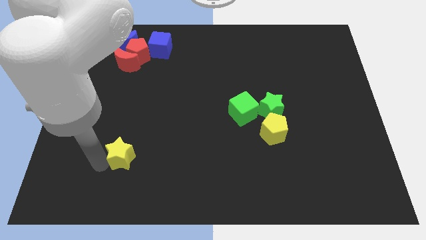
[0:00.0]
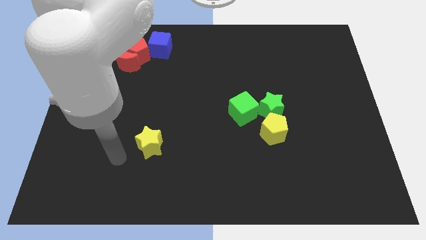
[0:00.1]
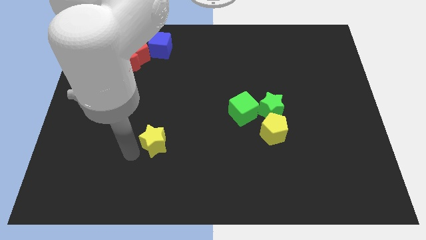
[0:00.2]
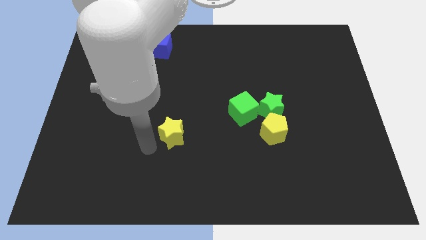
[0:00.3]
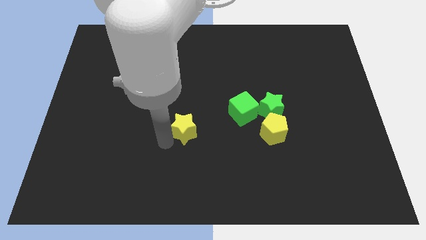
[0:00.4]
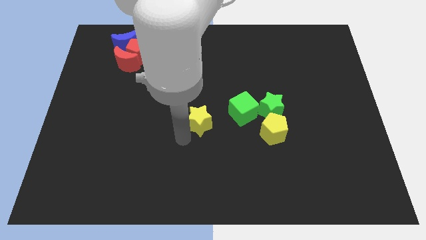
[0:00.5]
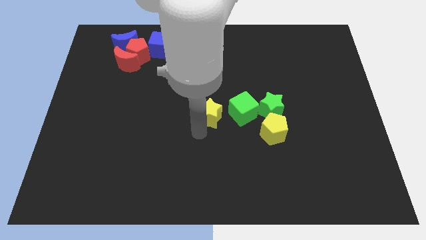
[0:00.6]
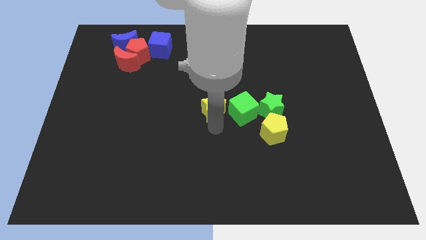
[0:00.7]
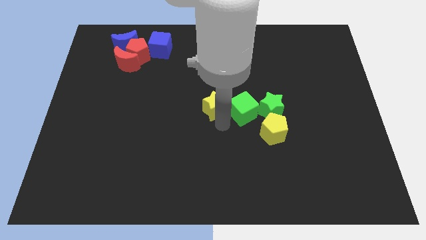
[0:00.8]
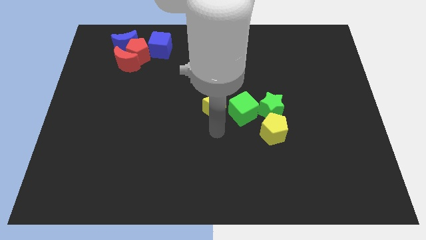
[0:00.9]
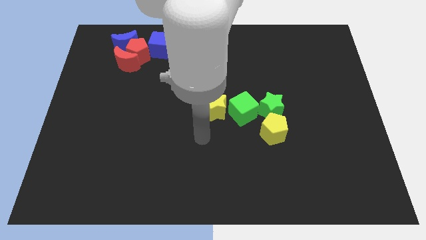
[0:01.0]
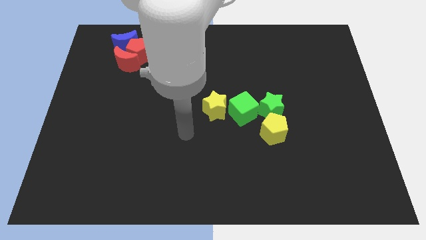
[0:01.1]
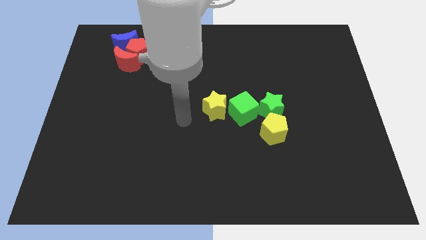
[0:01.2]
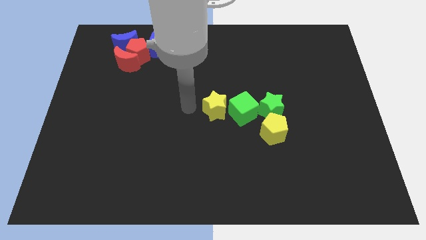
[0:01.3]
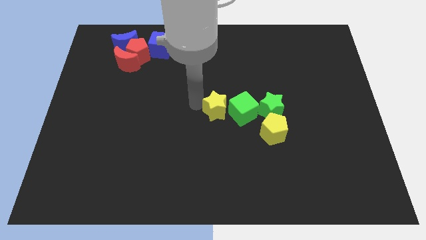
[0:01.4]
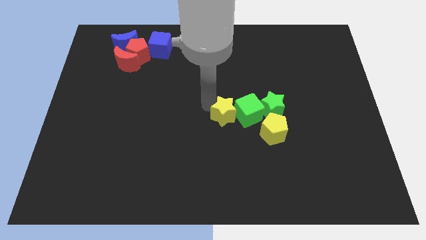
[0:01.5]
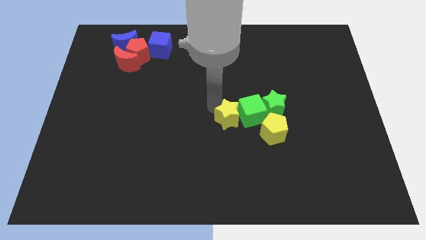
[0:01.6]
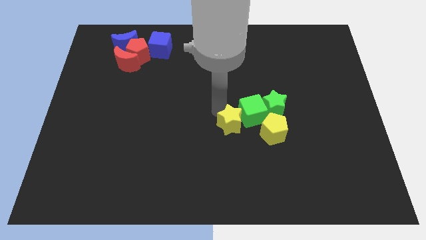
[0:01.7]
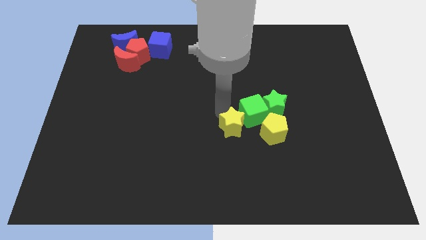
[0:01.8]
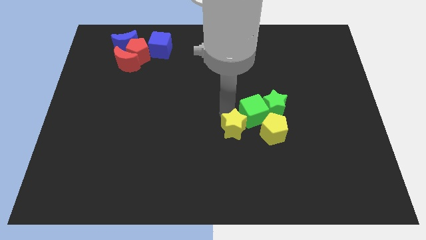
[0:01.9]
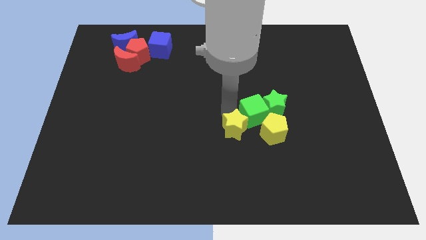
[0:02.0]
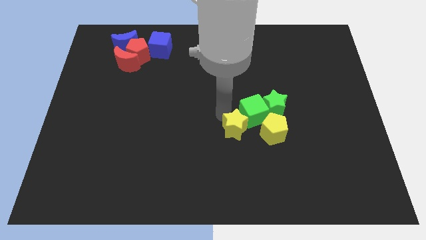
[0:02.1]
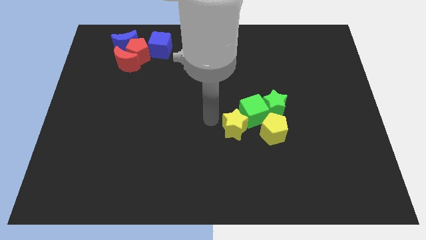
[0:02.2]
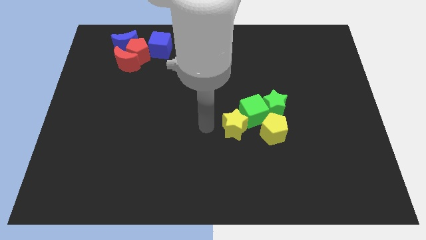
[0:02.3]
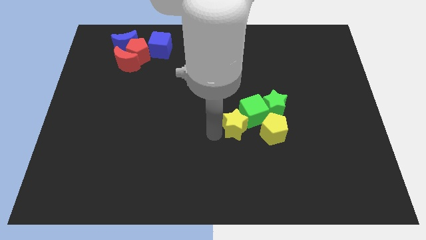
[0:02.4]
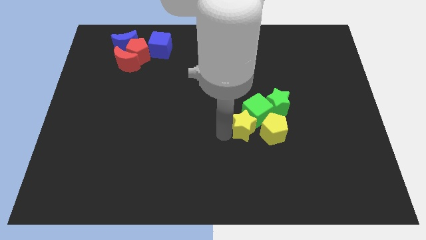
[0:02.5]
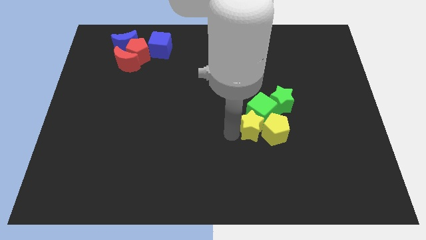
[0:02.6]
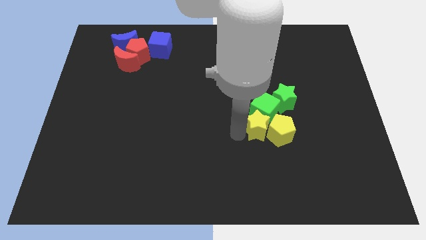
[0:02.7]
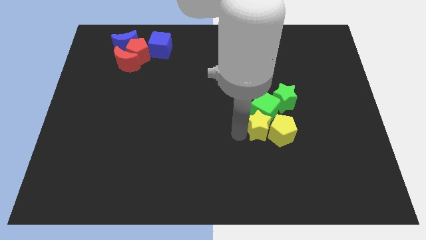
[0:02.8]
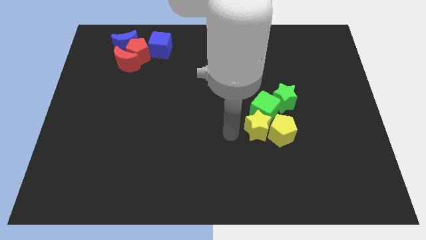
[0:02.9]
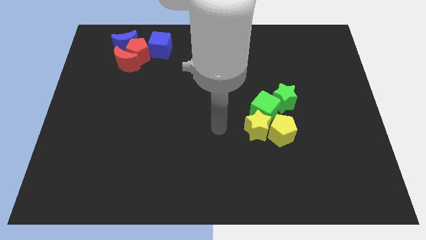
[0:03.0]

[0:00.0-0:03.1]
push the yellow star close to the yellow pentagon

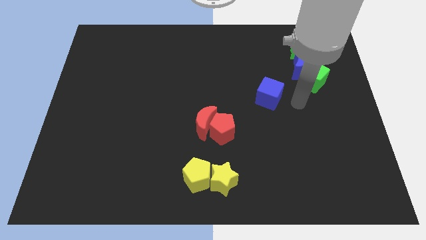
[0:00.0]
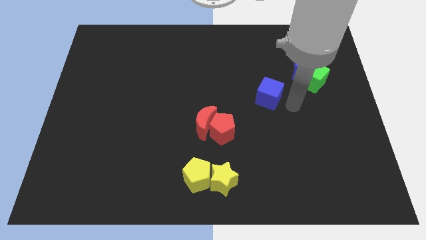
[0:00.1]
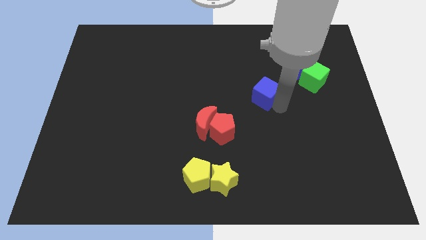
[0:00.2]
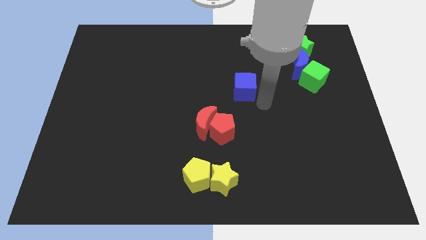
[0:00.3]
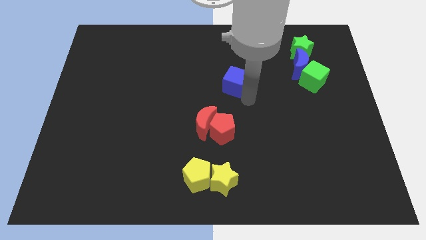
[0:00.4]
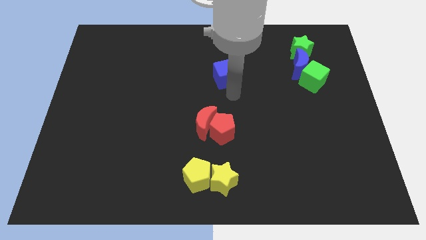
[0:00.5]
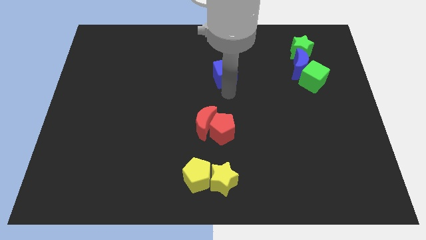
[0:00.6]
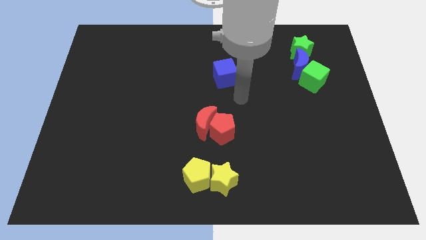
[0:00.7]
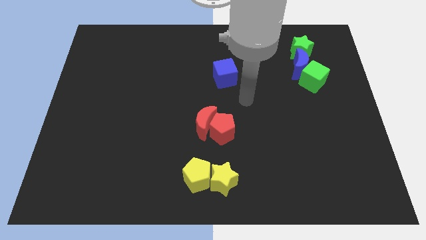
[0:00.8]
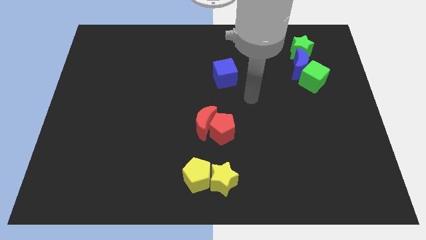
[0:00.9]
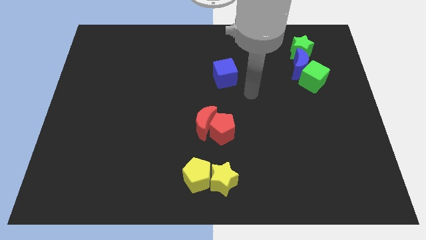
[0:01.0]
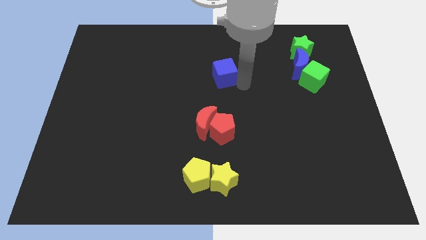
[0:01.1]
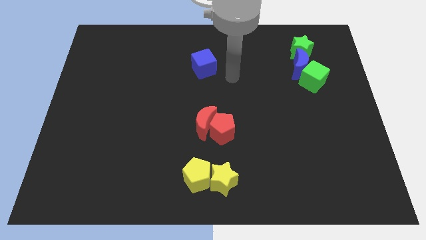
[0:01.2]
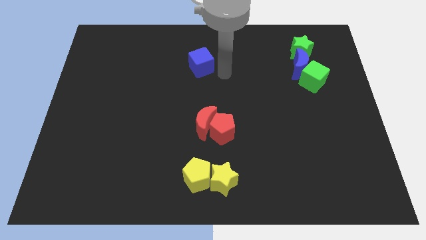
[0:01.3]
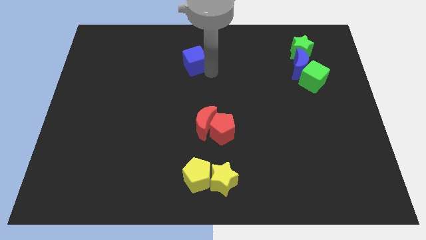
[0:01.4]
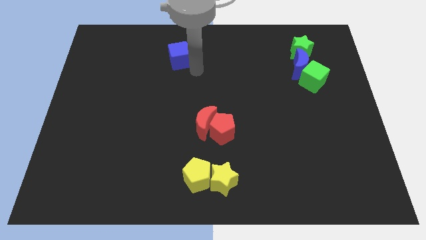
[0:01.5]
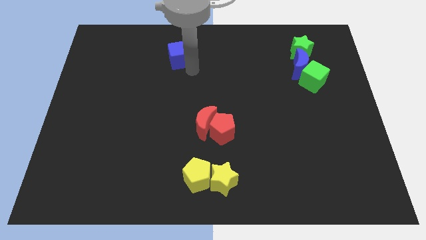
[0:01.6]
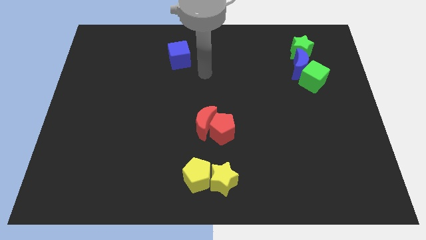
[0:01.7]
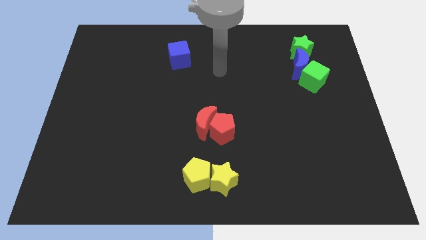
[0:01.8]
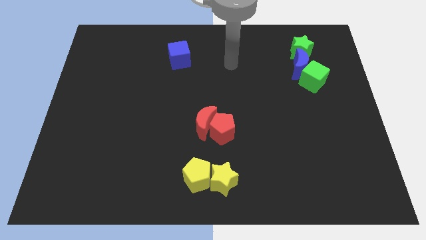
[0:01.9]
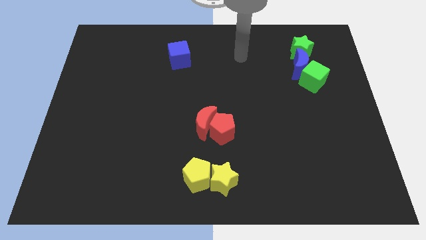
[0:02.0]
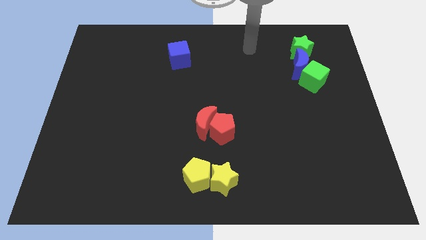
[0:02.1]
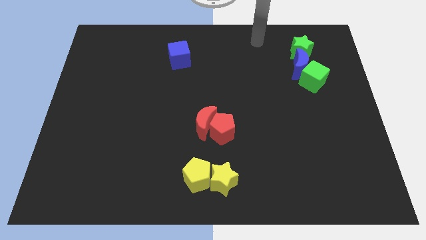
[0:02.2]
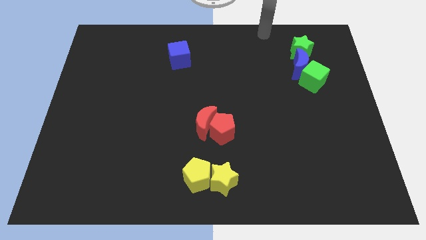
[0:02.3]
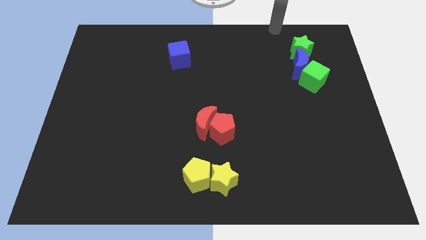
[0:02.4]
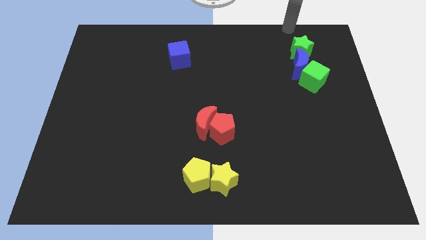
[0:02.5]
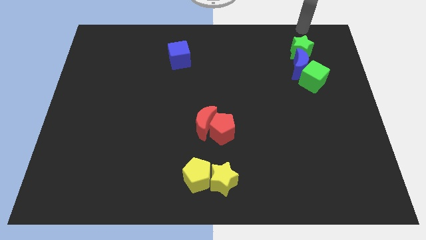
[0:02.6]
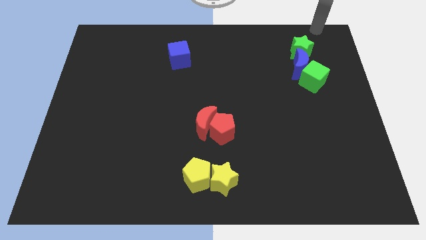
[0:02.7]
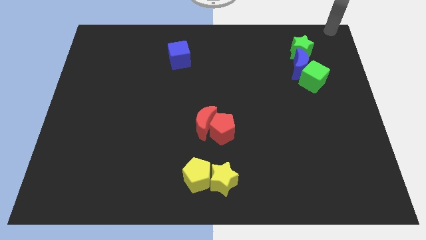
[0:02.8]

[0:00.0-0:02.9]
push the blue cube towards the top left side of the board

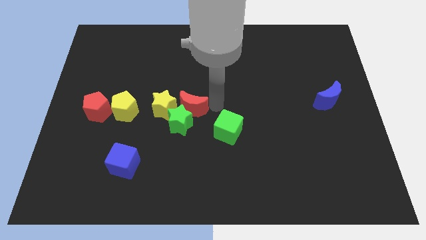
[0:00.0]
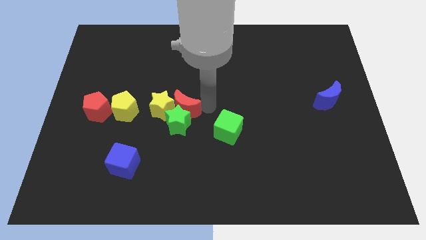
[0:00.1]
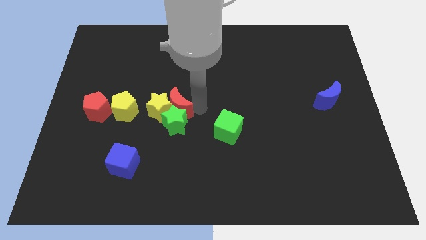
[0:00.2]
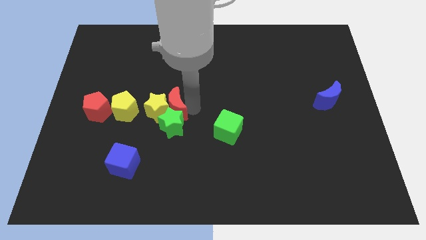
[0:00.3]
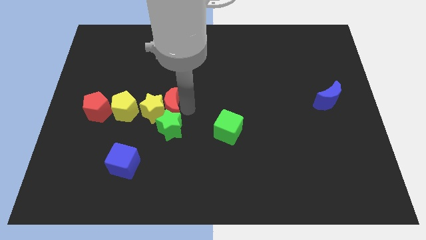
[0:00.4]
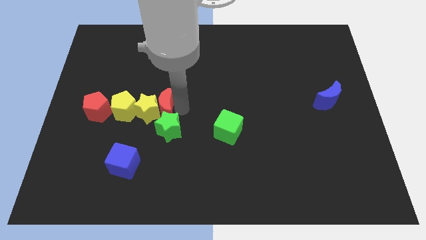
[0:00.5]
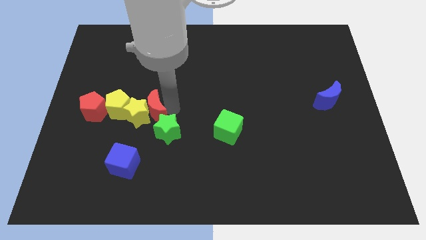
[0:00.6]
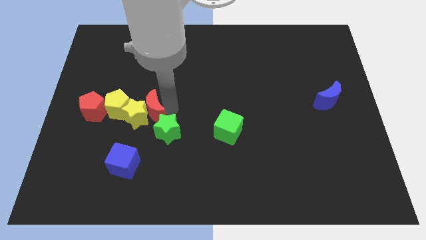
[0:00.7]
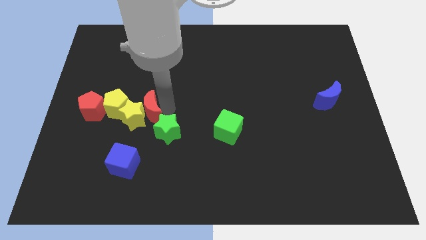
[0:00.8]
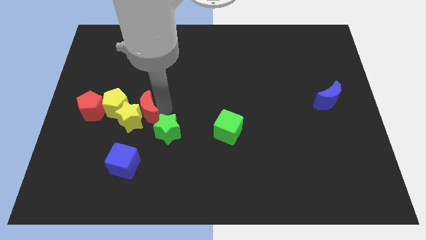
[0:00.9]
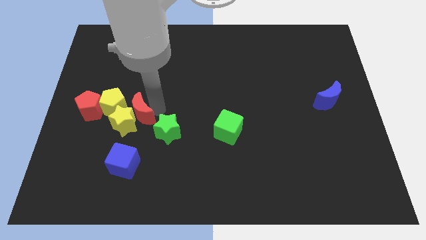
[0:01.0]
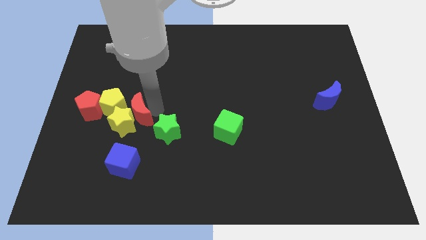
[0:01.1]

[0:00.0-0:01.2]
separate the yellow star and red moon from the green star

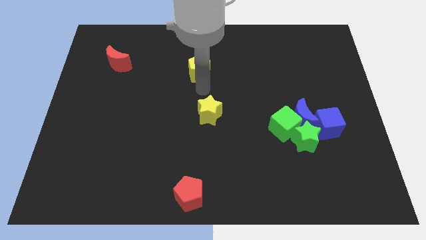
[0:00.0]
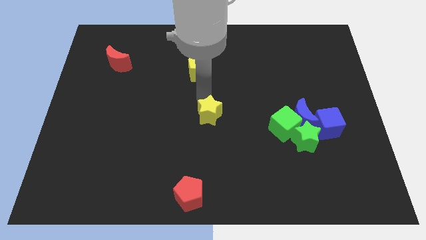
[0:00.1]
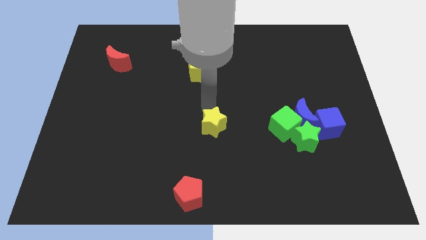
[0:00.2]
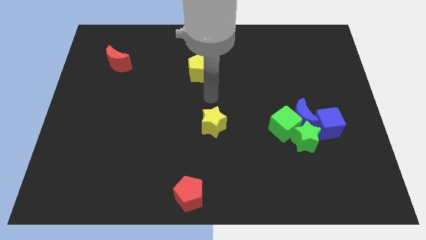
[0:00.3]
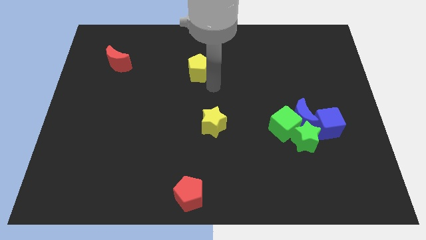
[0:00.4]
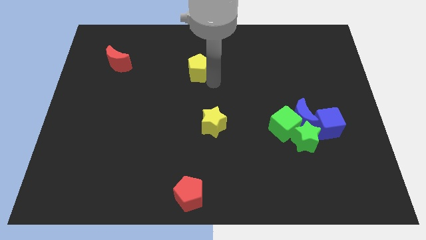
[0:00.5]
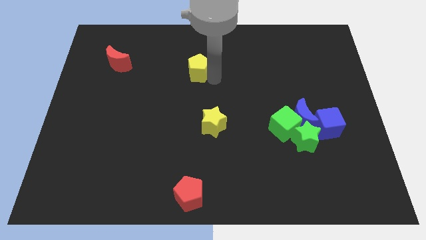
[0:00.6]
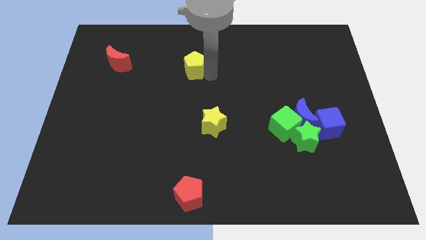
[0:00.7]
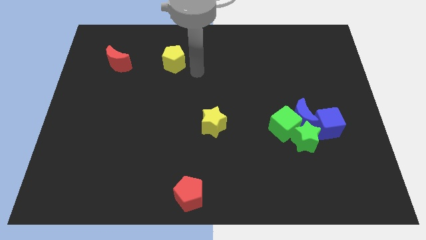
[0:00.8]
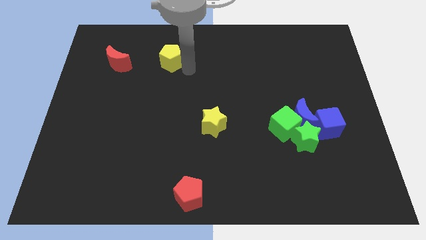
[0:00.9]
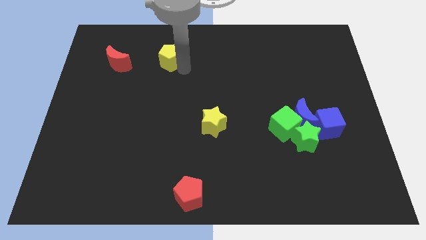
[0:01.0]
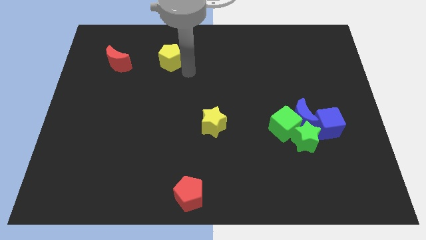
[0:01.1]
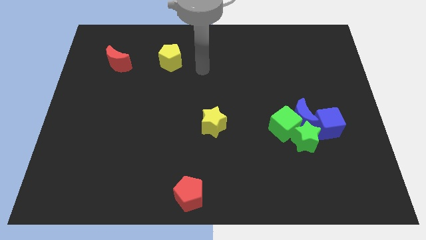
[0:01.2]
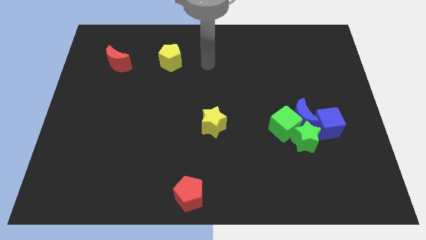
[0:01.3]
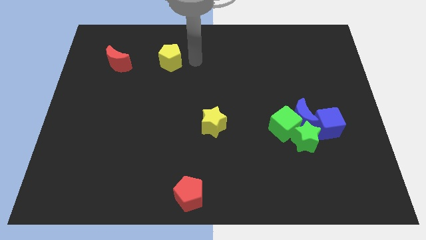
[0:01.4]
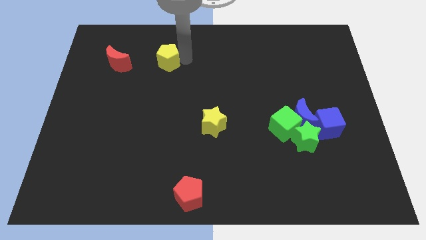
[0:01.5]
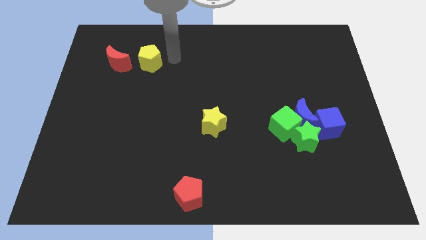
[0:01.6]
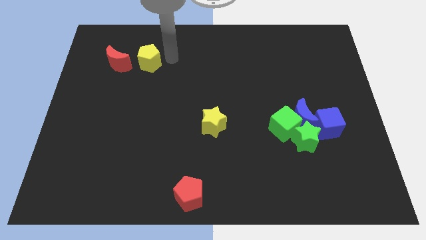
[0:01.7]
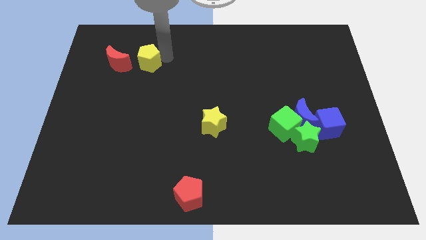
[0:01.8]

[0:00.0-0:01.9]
place yellow pentagon on the right side of the red crescent
